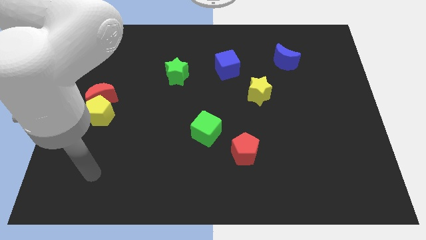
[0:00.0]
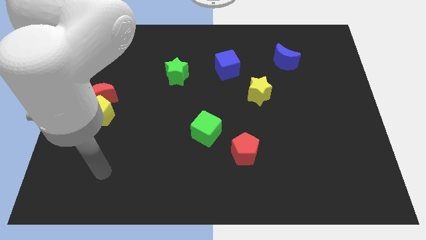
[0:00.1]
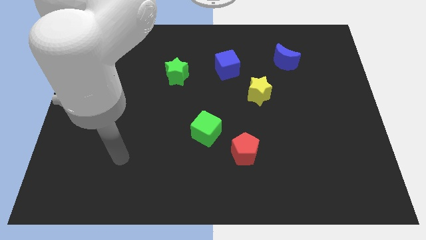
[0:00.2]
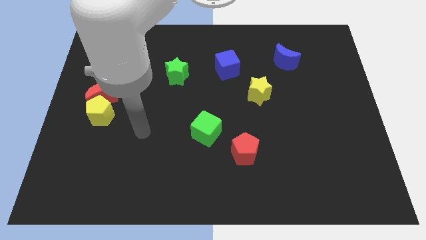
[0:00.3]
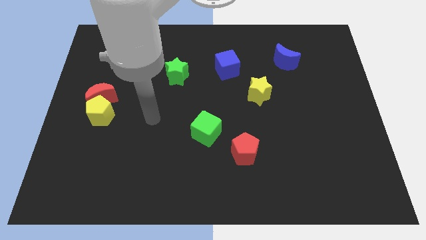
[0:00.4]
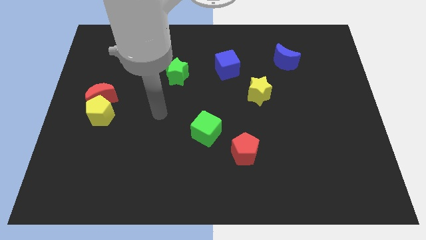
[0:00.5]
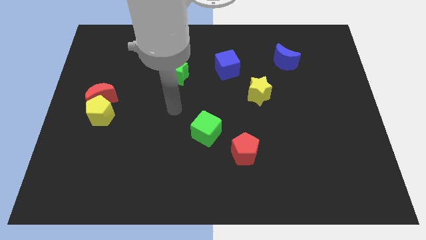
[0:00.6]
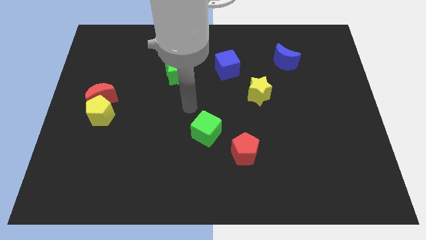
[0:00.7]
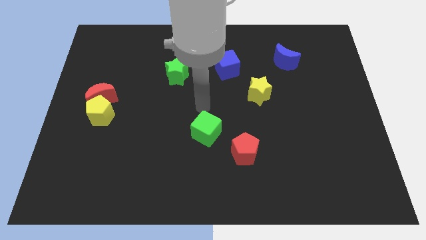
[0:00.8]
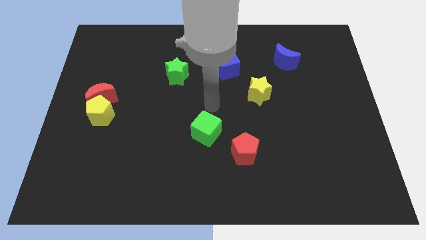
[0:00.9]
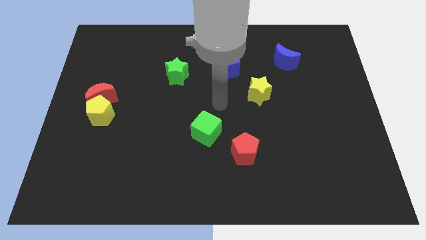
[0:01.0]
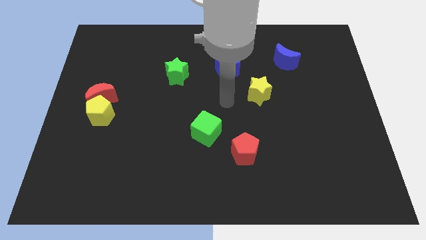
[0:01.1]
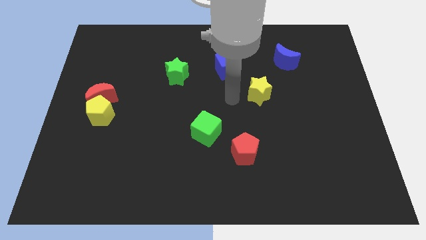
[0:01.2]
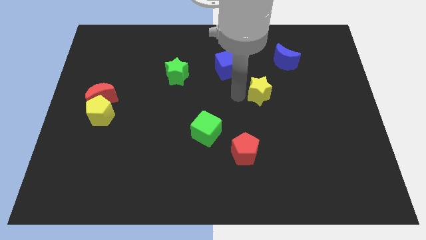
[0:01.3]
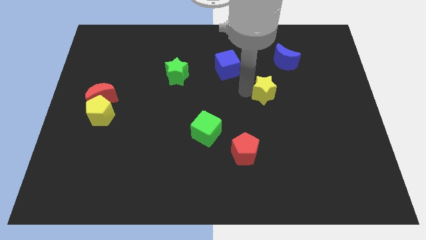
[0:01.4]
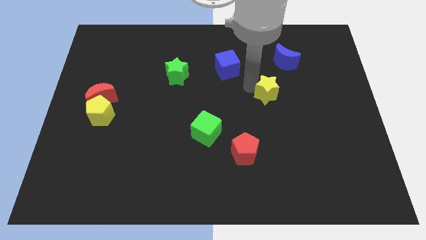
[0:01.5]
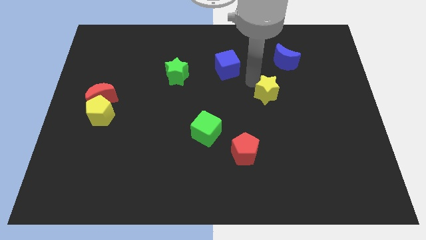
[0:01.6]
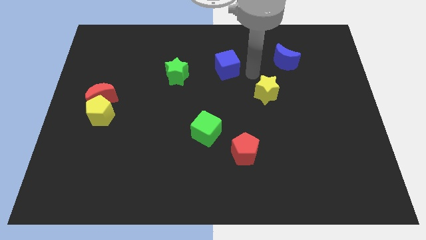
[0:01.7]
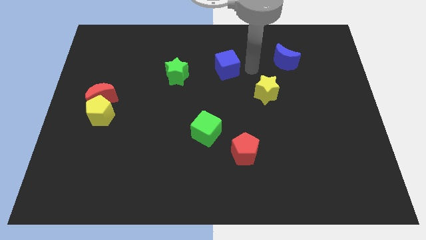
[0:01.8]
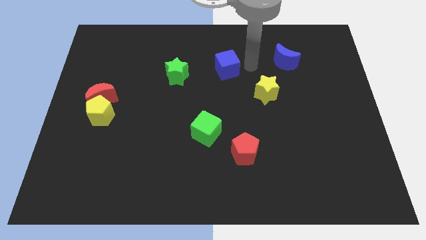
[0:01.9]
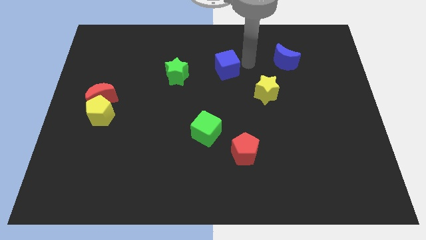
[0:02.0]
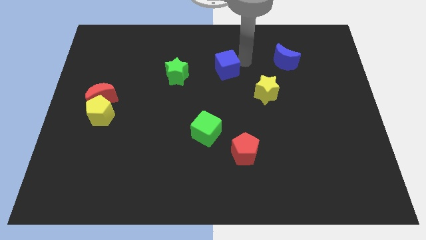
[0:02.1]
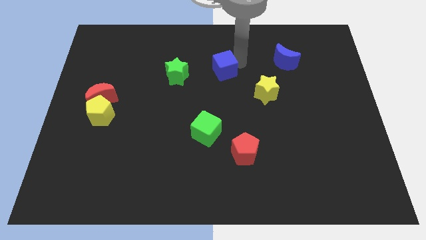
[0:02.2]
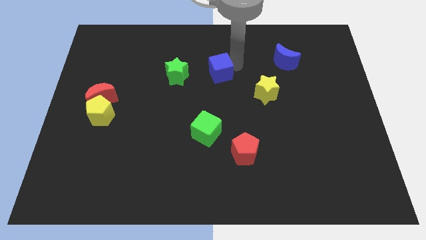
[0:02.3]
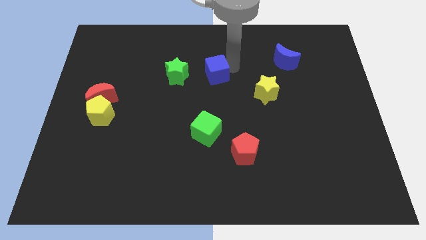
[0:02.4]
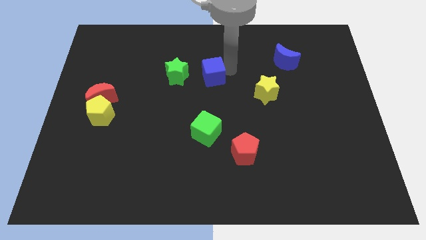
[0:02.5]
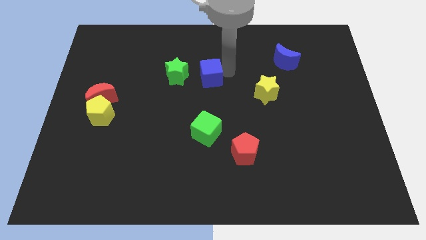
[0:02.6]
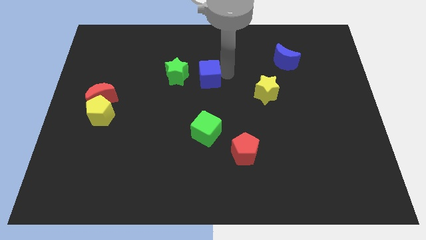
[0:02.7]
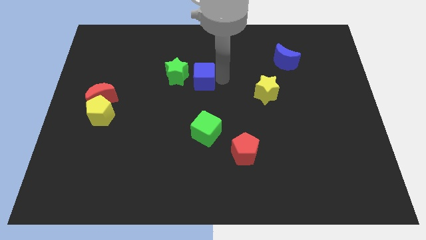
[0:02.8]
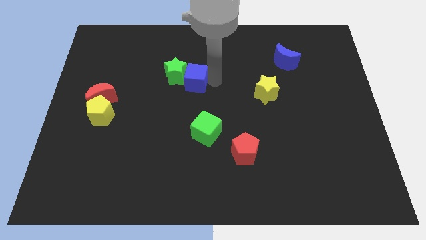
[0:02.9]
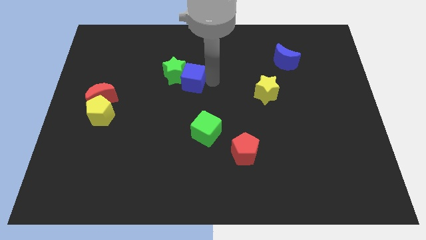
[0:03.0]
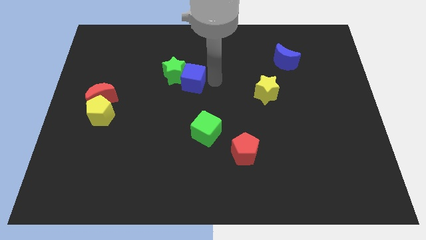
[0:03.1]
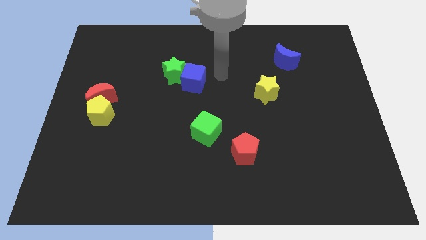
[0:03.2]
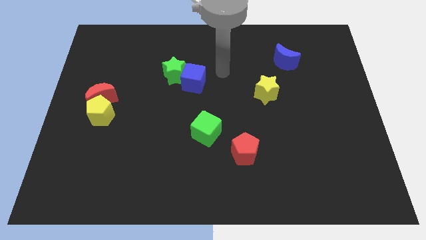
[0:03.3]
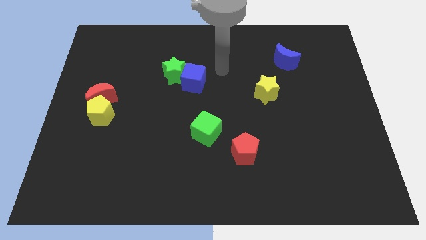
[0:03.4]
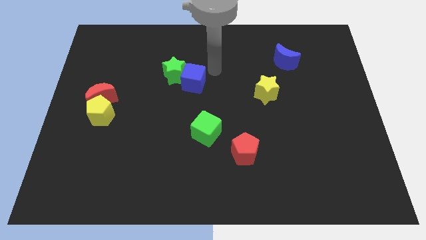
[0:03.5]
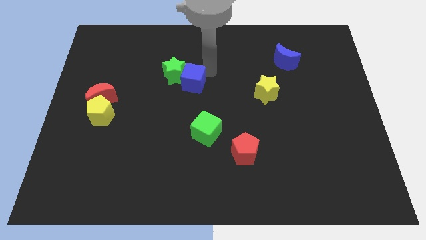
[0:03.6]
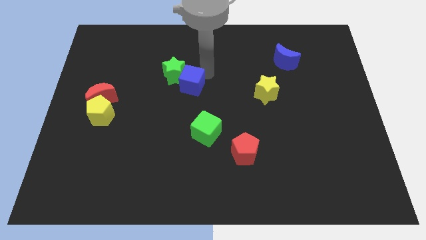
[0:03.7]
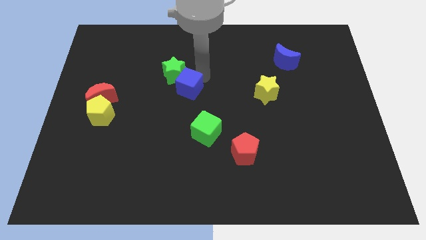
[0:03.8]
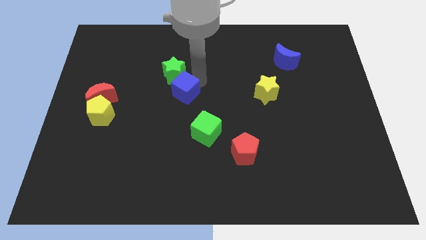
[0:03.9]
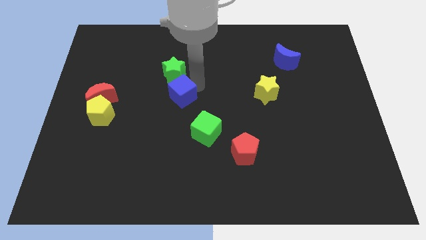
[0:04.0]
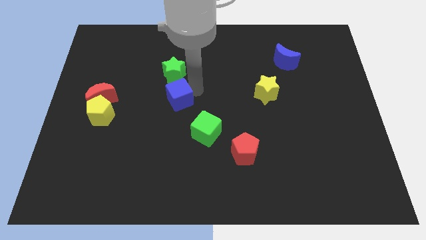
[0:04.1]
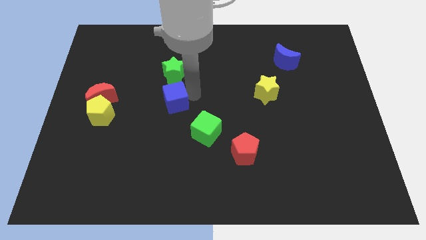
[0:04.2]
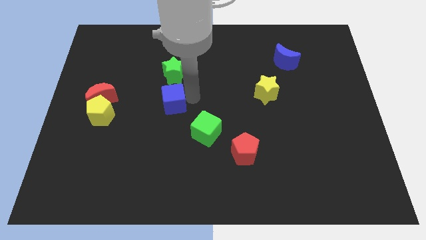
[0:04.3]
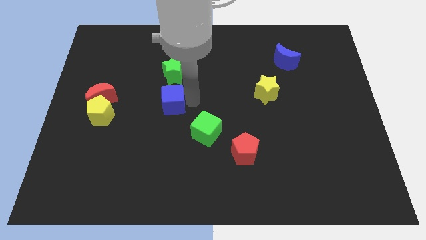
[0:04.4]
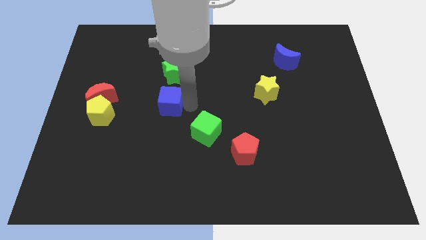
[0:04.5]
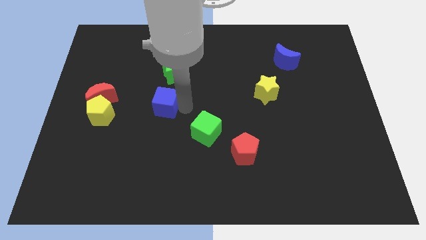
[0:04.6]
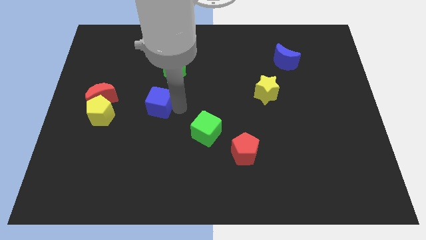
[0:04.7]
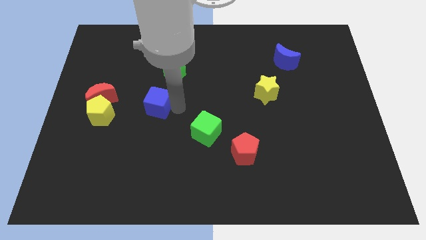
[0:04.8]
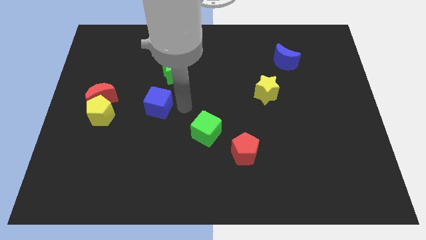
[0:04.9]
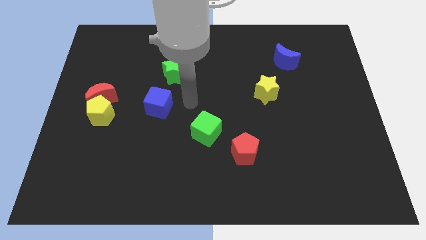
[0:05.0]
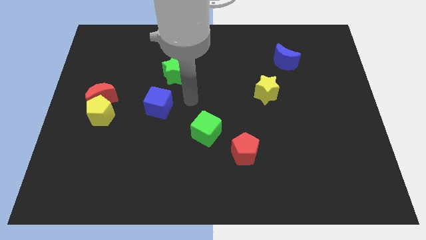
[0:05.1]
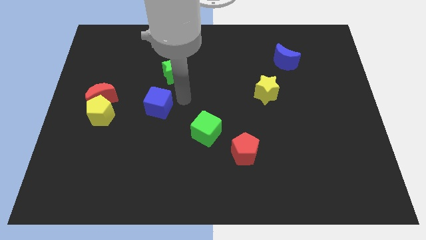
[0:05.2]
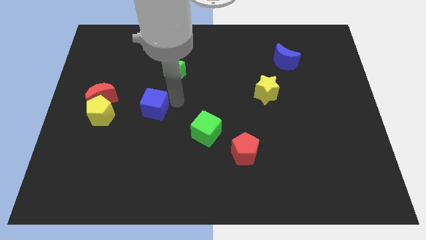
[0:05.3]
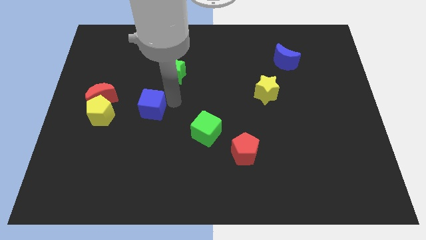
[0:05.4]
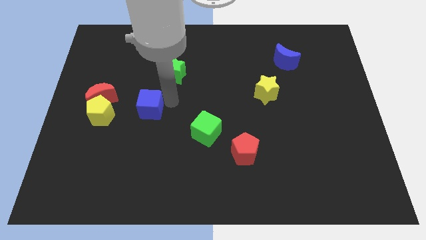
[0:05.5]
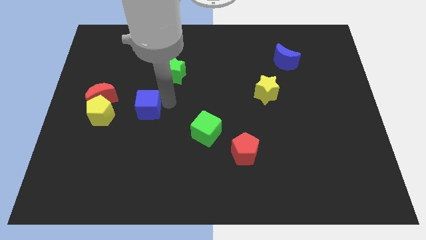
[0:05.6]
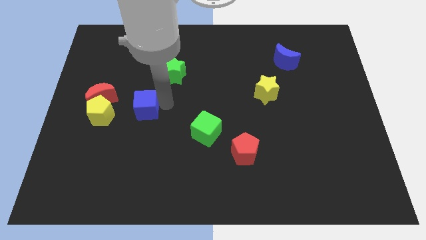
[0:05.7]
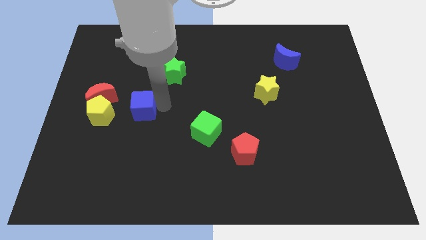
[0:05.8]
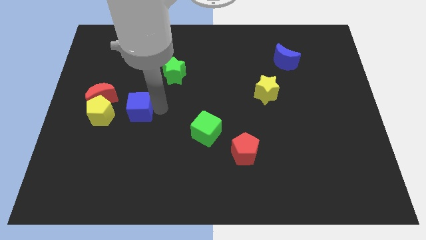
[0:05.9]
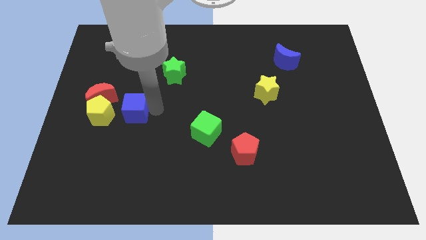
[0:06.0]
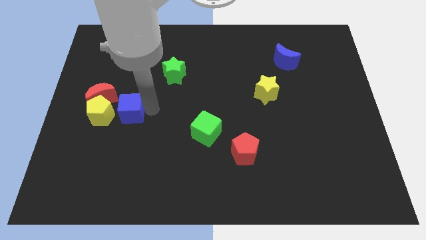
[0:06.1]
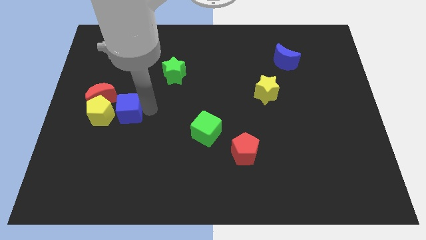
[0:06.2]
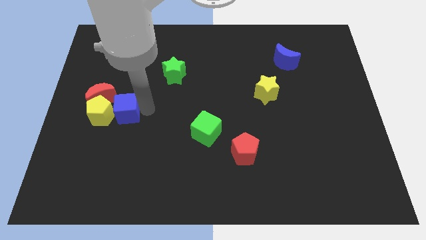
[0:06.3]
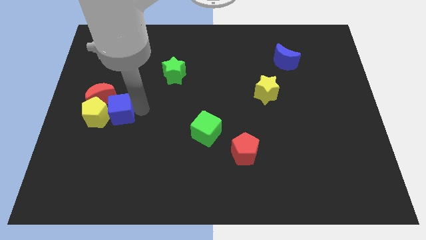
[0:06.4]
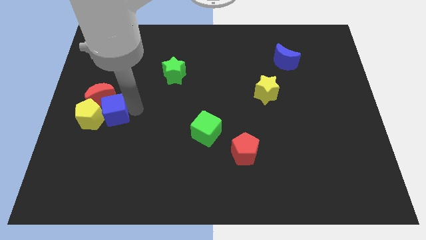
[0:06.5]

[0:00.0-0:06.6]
slide the blue cube towards the yellow pentagon

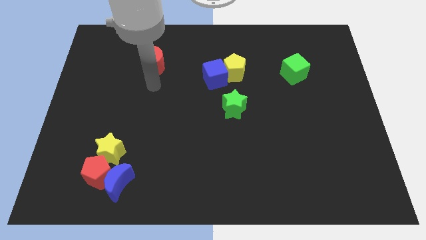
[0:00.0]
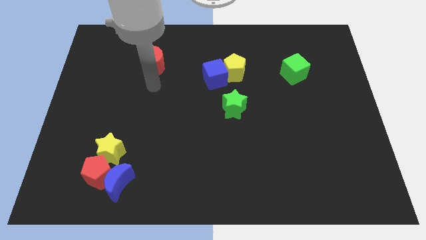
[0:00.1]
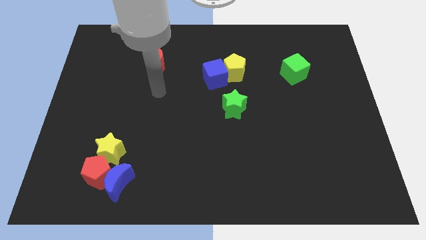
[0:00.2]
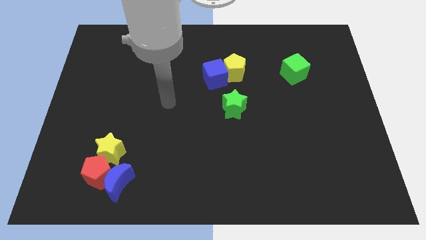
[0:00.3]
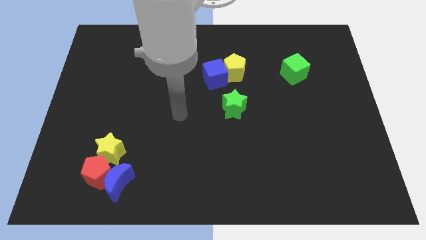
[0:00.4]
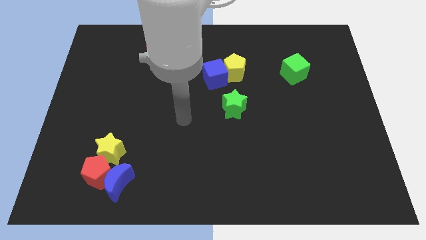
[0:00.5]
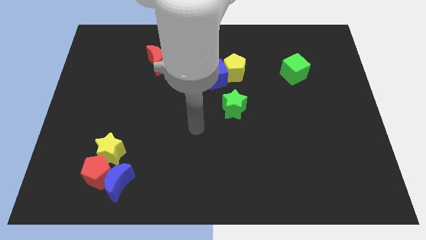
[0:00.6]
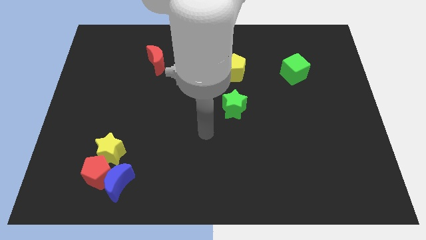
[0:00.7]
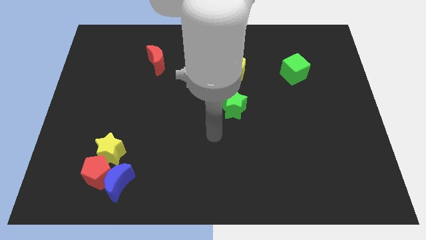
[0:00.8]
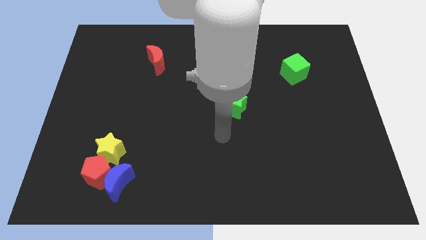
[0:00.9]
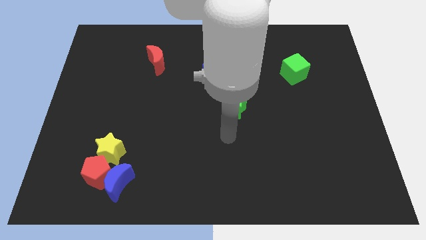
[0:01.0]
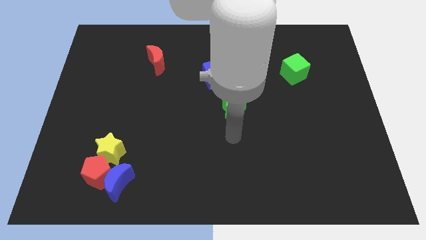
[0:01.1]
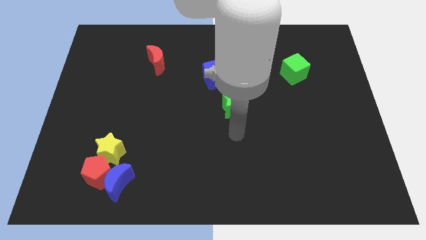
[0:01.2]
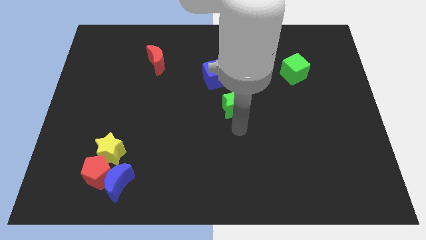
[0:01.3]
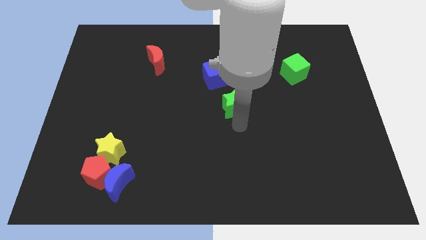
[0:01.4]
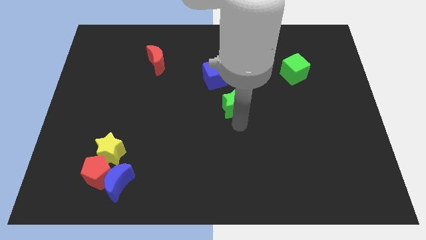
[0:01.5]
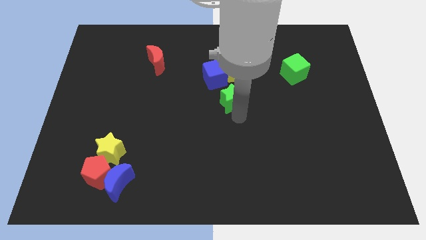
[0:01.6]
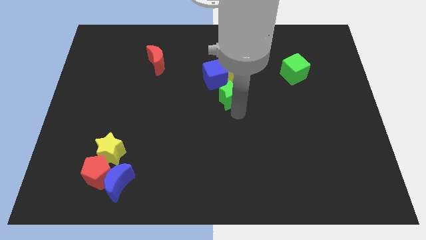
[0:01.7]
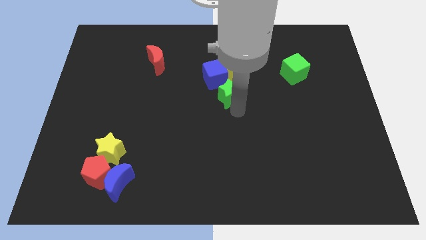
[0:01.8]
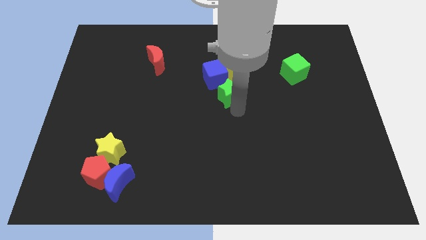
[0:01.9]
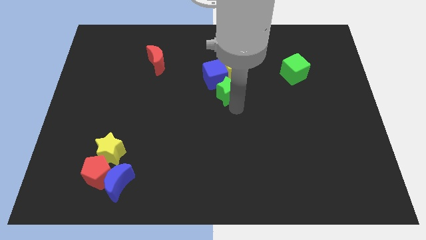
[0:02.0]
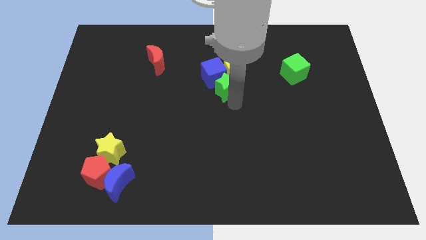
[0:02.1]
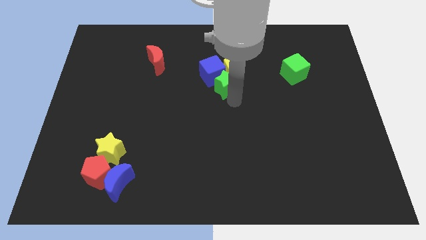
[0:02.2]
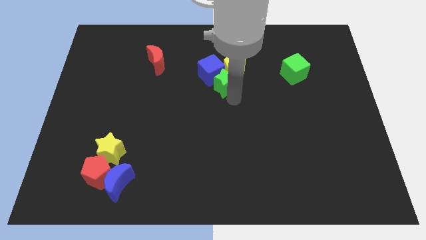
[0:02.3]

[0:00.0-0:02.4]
slide the green star close to the blue cube
